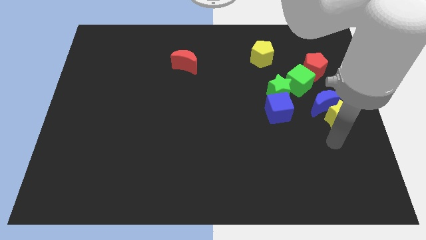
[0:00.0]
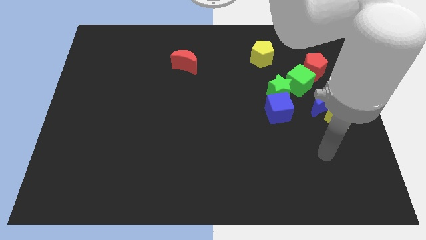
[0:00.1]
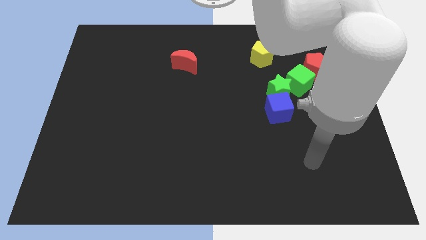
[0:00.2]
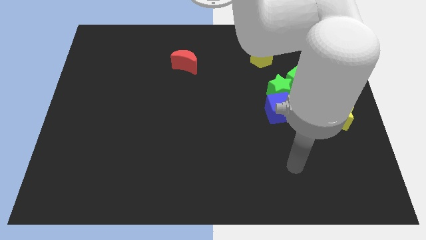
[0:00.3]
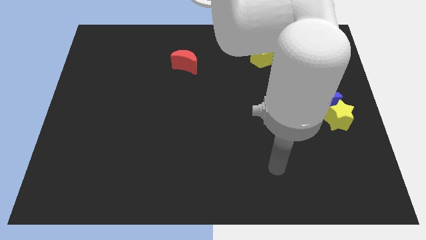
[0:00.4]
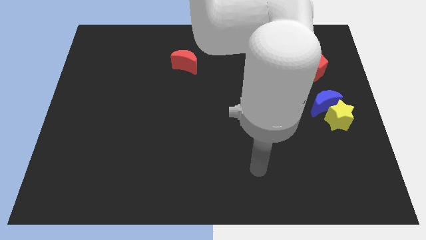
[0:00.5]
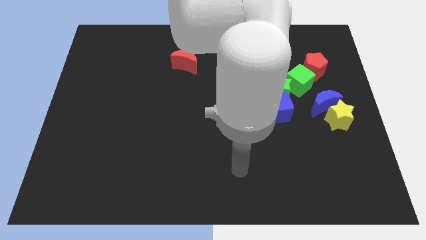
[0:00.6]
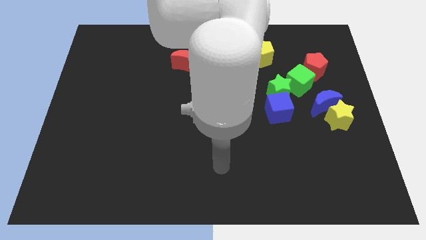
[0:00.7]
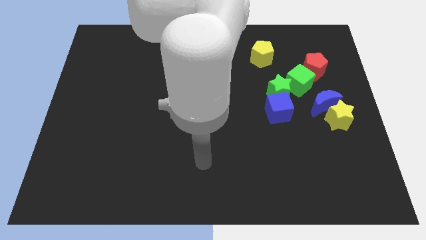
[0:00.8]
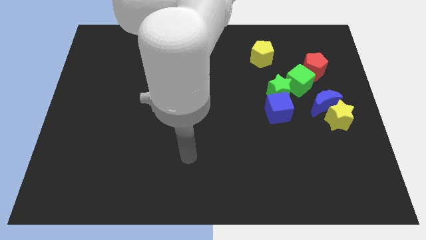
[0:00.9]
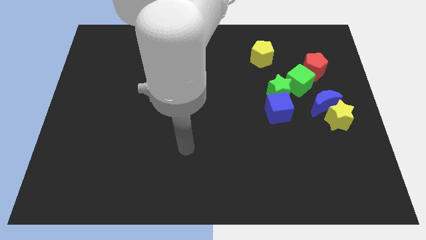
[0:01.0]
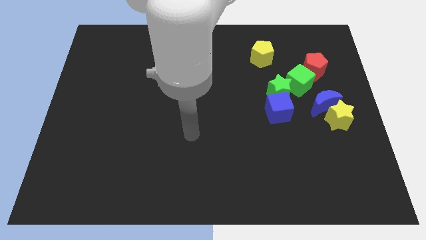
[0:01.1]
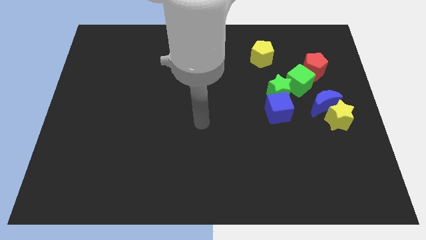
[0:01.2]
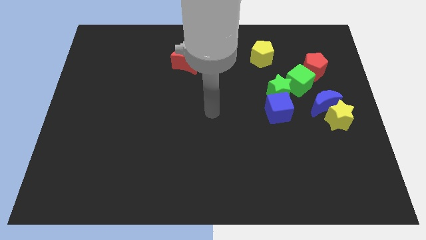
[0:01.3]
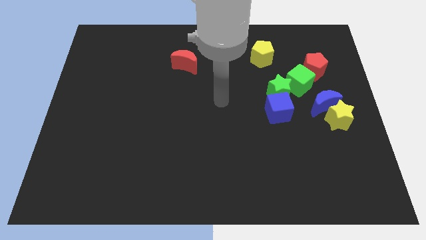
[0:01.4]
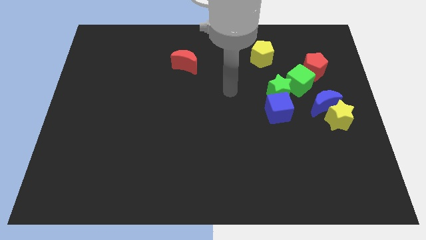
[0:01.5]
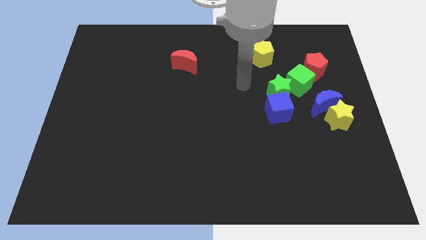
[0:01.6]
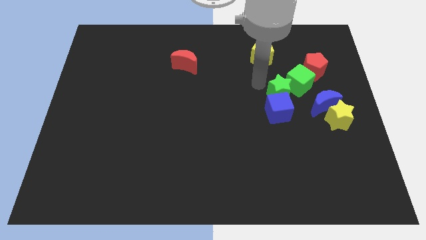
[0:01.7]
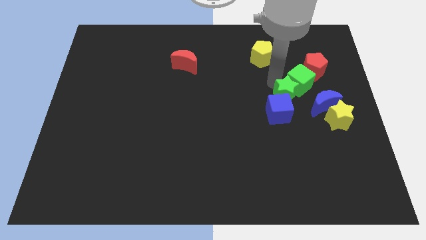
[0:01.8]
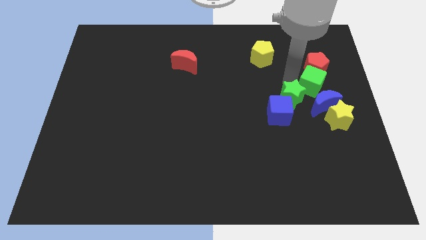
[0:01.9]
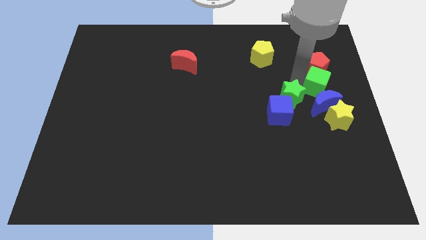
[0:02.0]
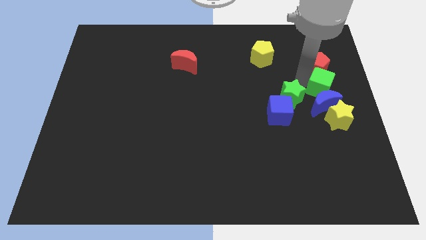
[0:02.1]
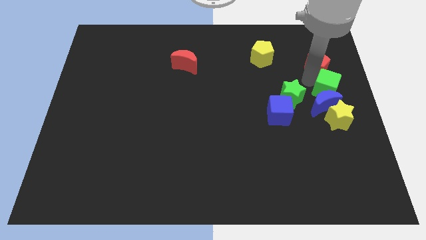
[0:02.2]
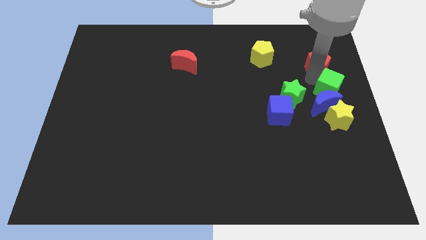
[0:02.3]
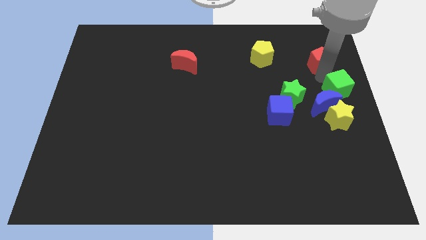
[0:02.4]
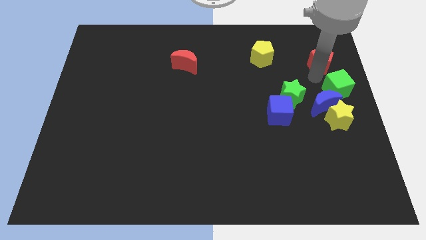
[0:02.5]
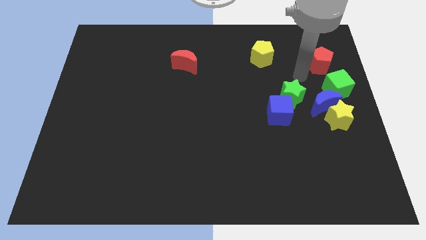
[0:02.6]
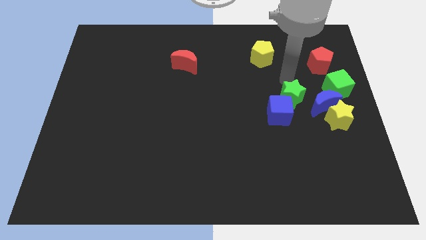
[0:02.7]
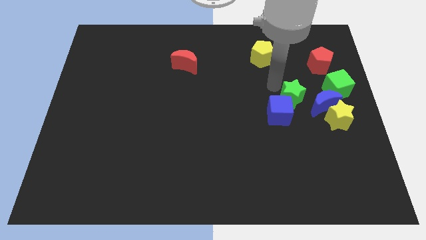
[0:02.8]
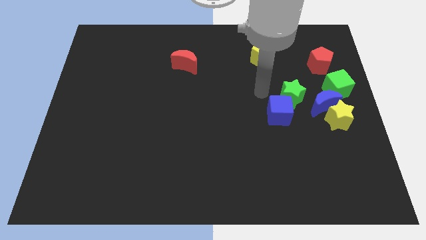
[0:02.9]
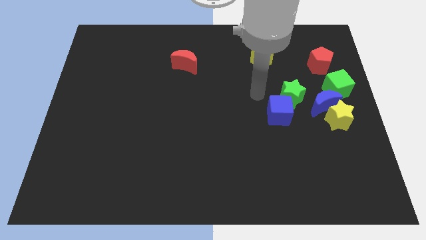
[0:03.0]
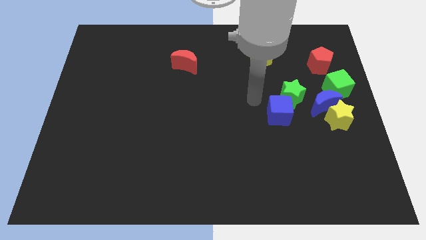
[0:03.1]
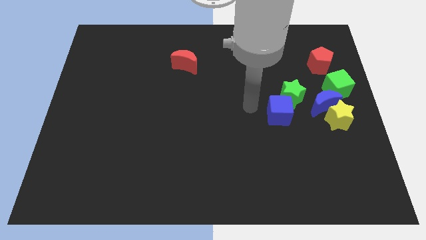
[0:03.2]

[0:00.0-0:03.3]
push the green cube and red pentagon towards the right side of the board

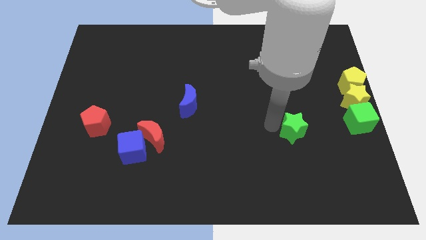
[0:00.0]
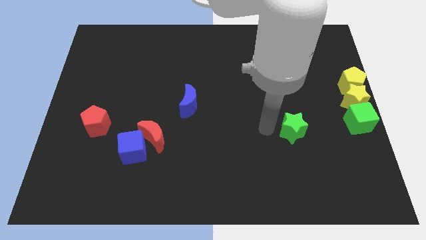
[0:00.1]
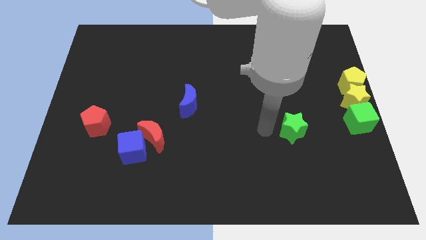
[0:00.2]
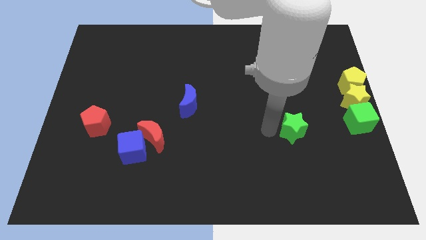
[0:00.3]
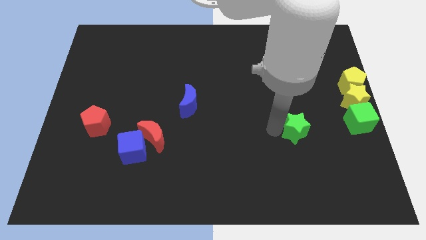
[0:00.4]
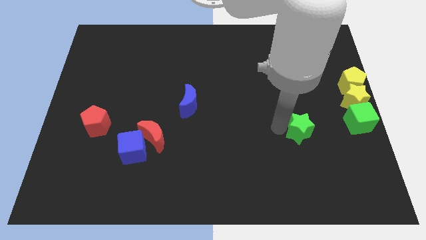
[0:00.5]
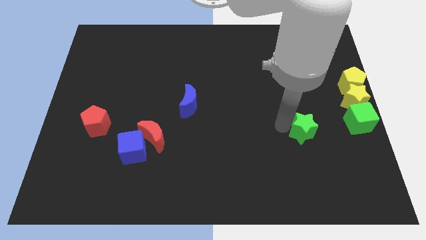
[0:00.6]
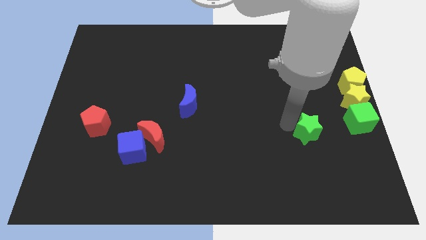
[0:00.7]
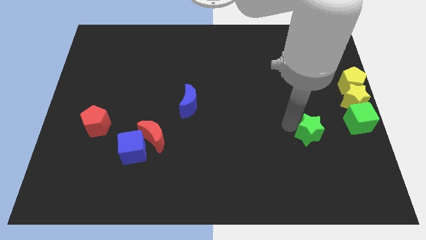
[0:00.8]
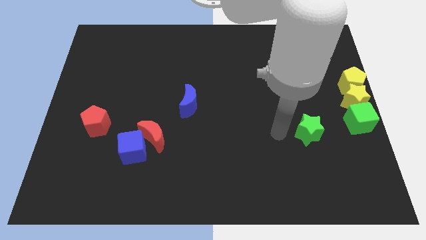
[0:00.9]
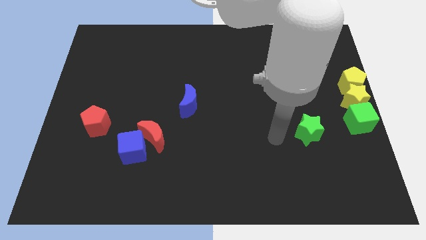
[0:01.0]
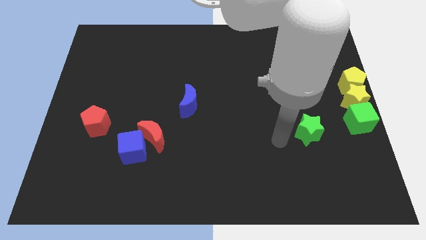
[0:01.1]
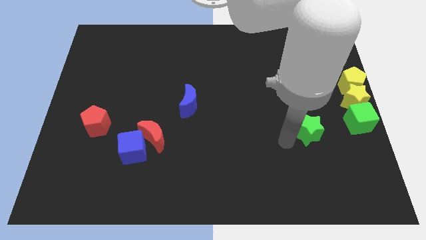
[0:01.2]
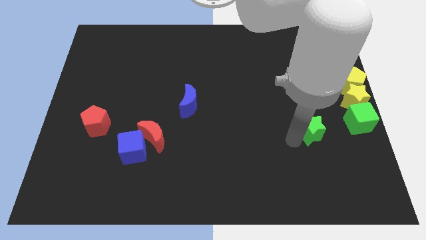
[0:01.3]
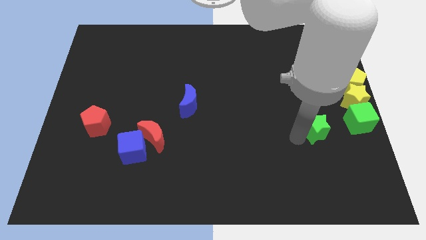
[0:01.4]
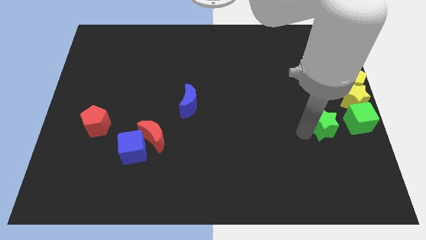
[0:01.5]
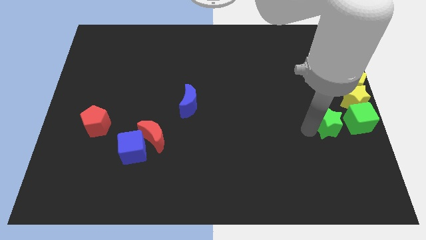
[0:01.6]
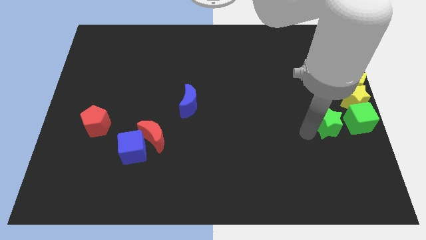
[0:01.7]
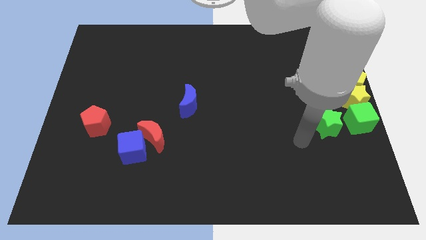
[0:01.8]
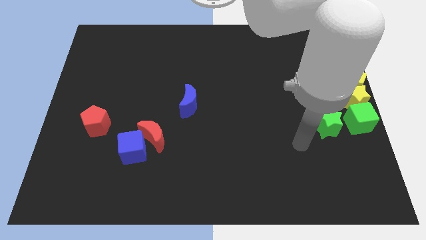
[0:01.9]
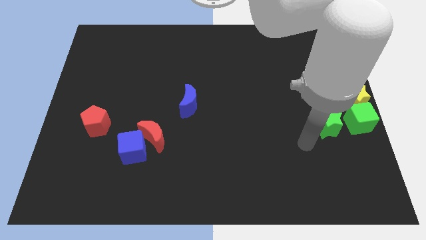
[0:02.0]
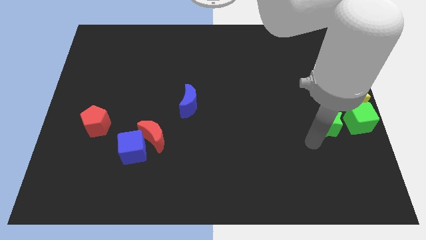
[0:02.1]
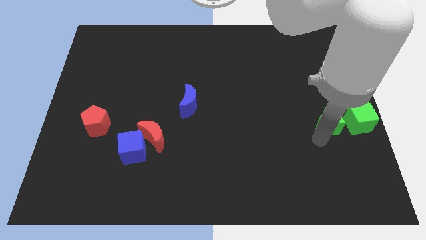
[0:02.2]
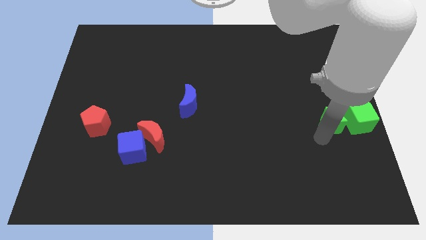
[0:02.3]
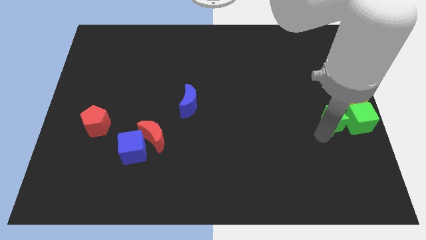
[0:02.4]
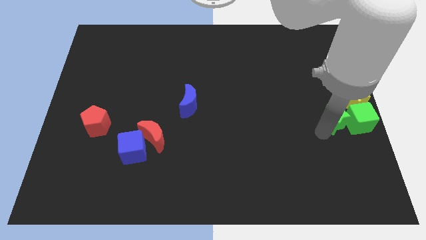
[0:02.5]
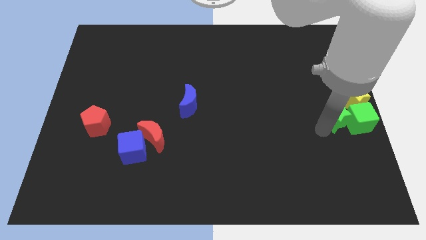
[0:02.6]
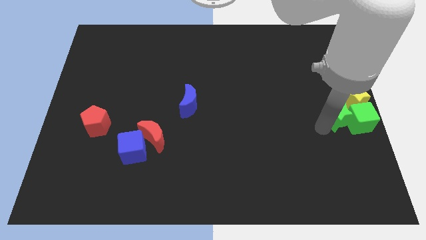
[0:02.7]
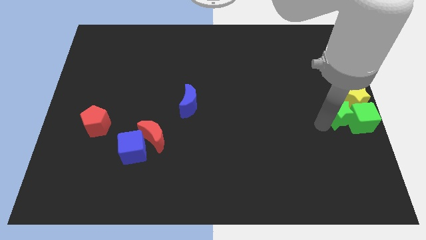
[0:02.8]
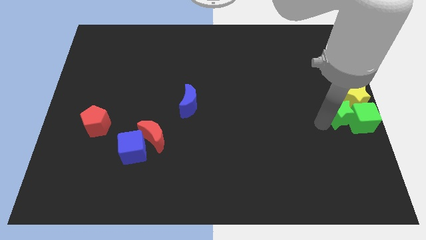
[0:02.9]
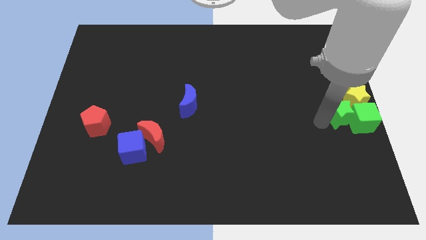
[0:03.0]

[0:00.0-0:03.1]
drag the green star into the left side of the green cube

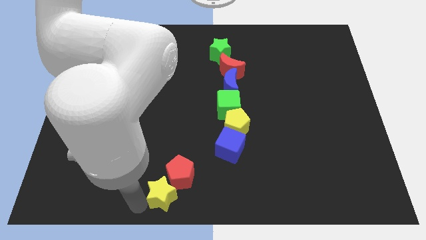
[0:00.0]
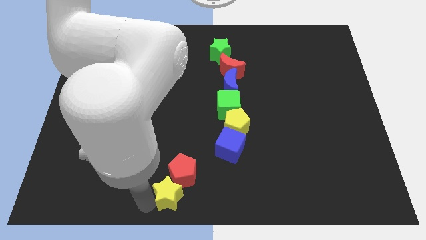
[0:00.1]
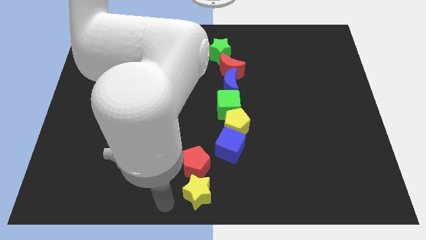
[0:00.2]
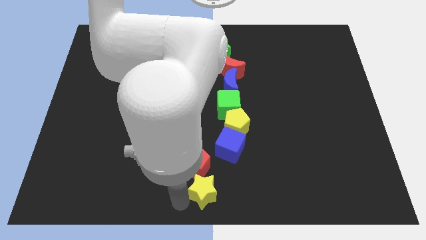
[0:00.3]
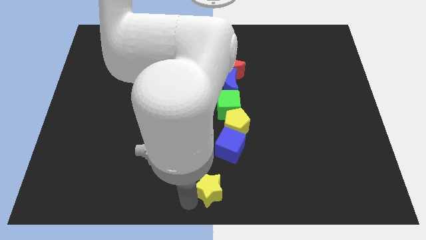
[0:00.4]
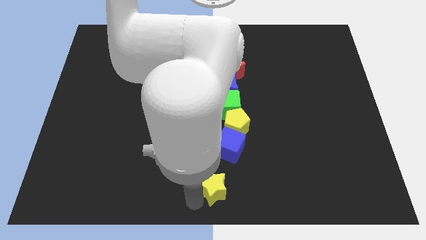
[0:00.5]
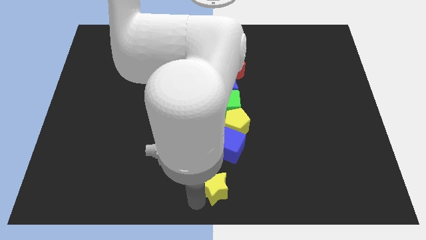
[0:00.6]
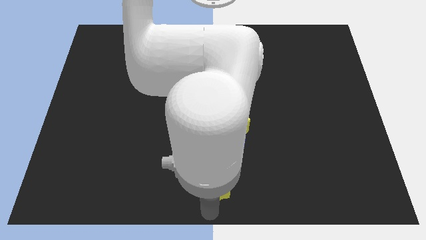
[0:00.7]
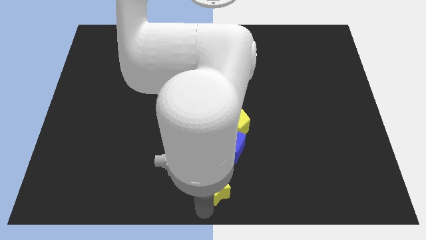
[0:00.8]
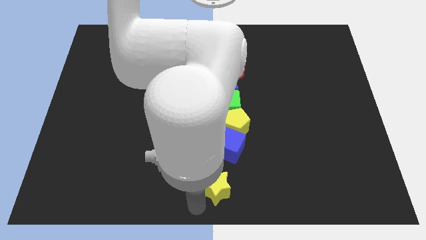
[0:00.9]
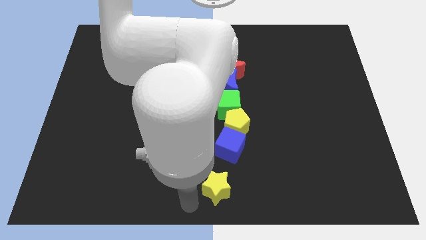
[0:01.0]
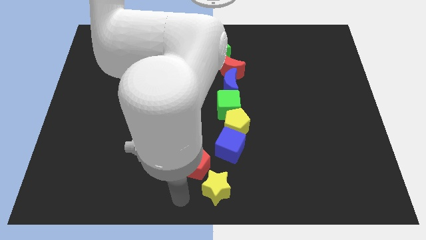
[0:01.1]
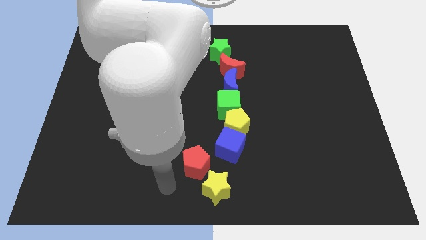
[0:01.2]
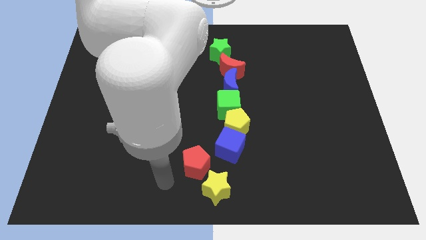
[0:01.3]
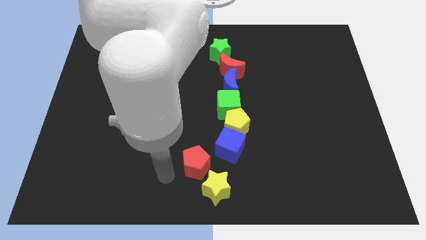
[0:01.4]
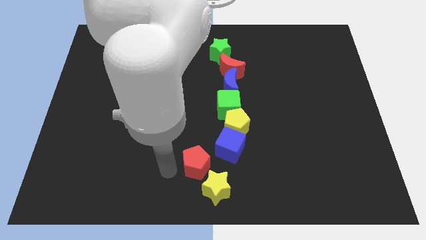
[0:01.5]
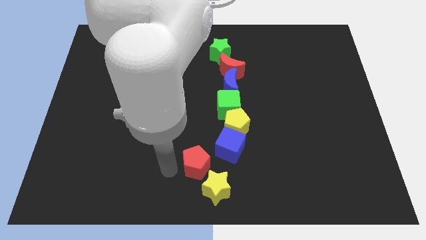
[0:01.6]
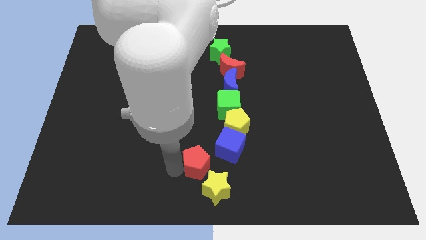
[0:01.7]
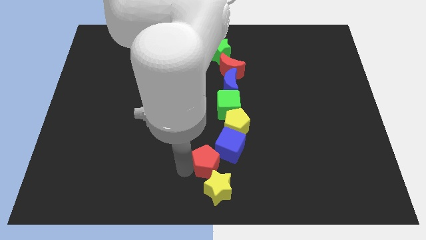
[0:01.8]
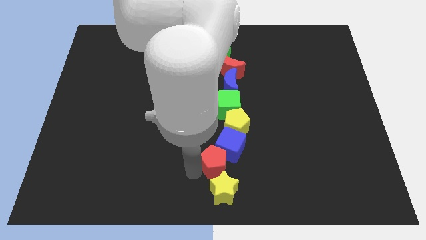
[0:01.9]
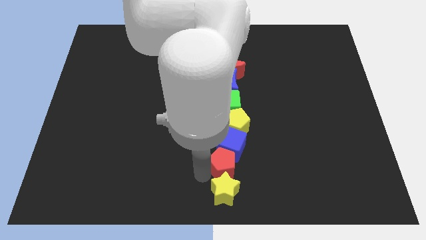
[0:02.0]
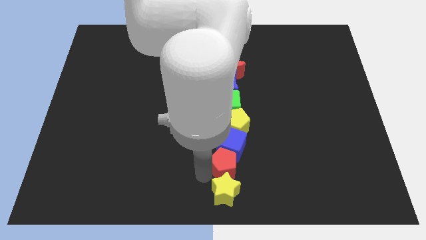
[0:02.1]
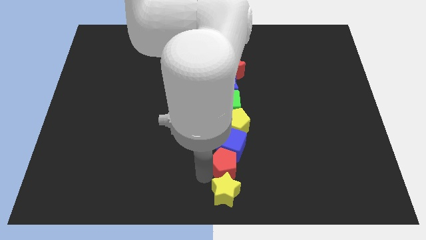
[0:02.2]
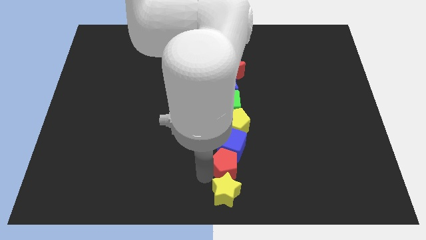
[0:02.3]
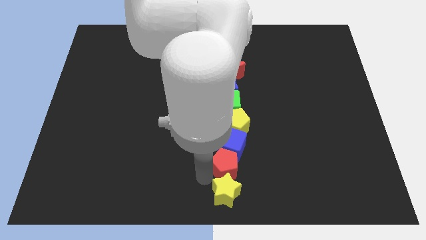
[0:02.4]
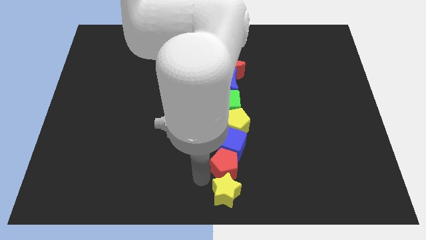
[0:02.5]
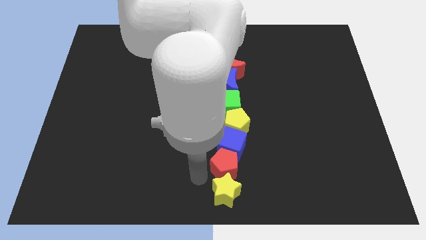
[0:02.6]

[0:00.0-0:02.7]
place the yellow star and the red pentagon to form a vertical line with the group of blocks

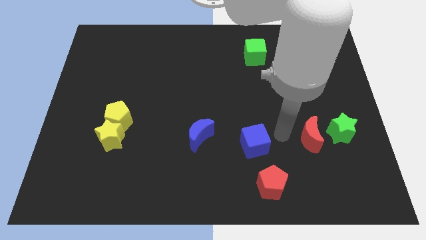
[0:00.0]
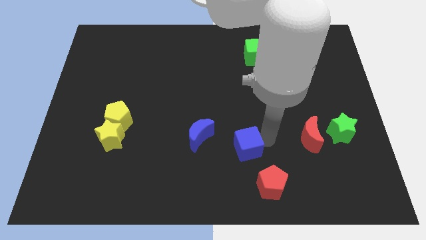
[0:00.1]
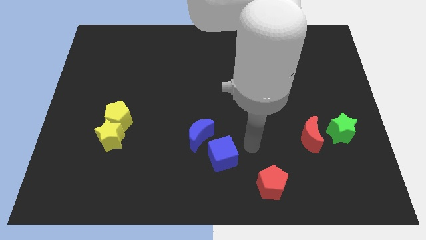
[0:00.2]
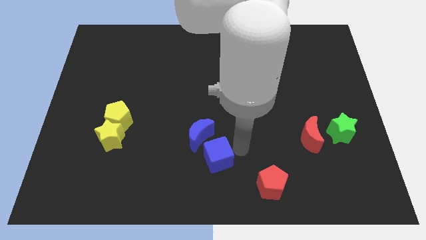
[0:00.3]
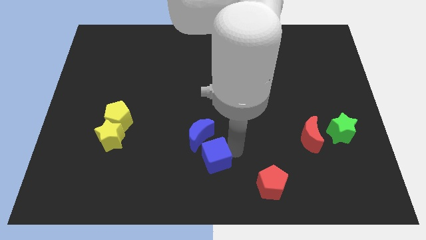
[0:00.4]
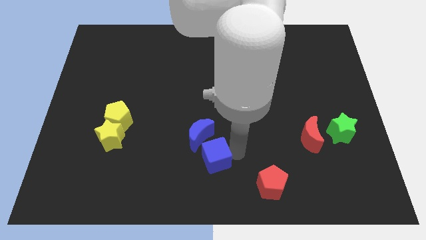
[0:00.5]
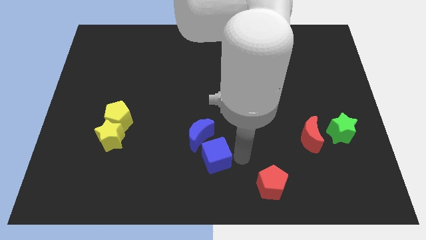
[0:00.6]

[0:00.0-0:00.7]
place the blue cube below the blue crescent
